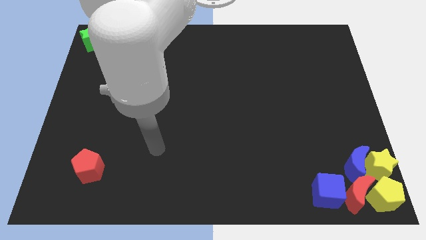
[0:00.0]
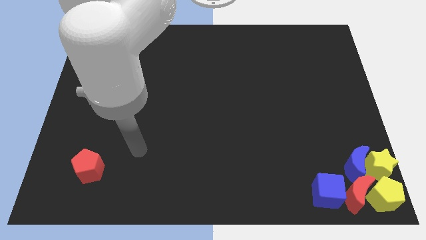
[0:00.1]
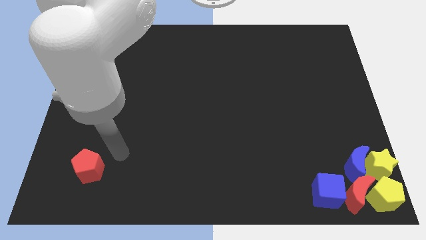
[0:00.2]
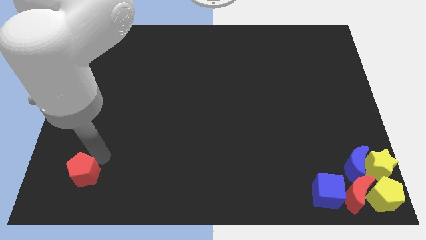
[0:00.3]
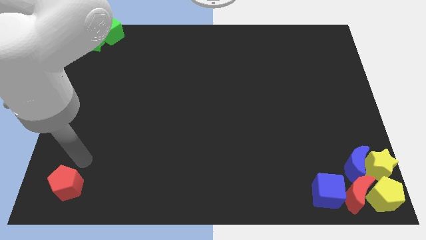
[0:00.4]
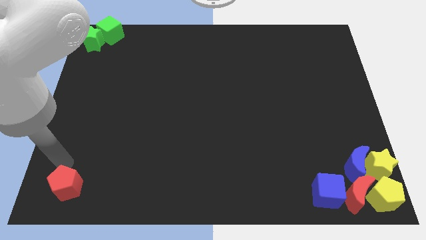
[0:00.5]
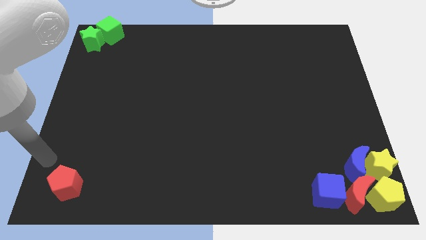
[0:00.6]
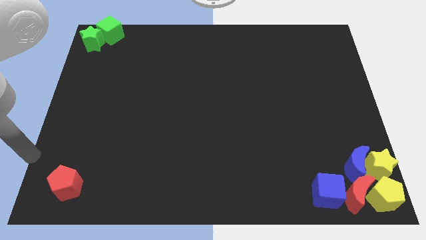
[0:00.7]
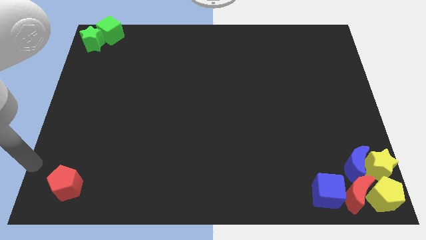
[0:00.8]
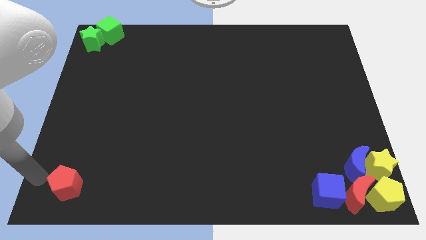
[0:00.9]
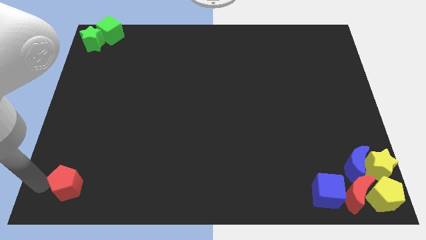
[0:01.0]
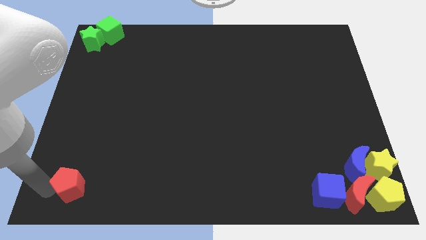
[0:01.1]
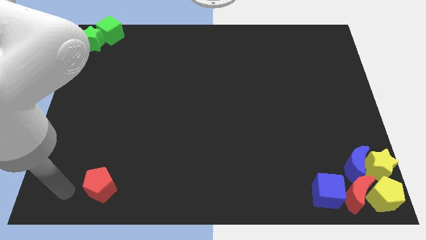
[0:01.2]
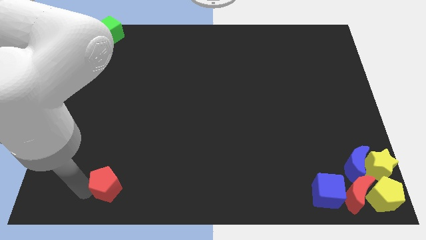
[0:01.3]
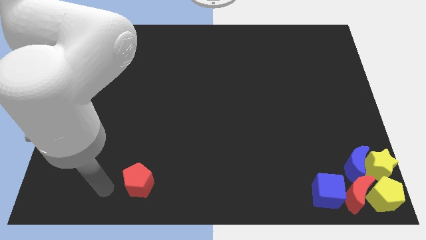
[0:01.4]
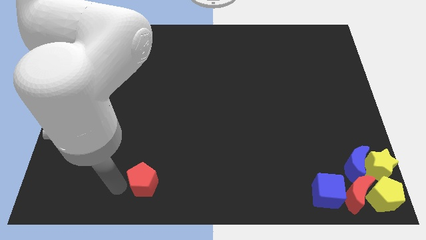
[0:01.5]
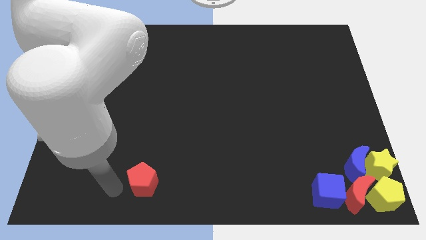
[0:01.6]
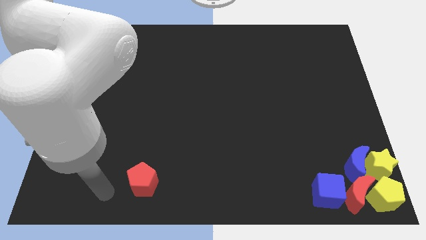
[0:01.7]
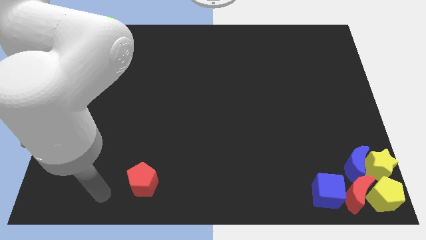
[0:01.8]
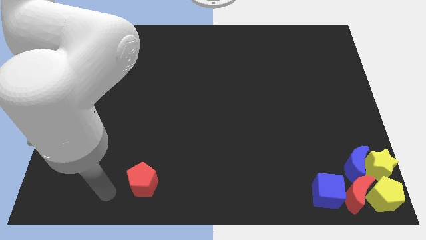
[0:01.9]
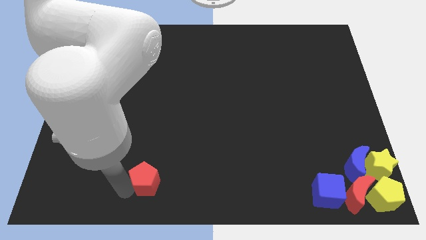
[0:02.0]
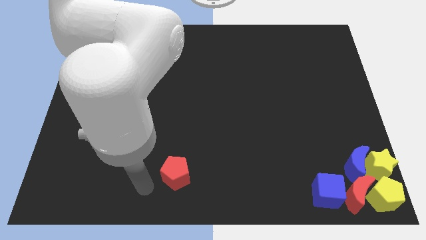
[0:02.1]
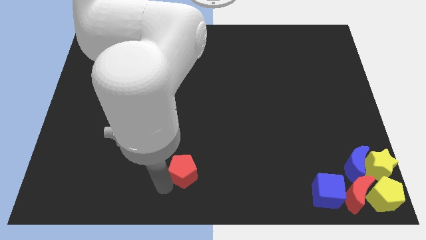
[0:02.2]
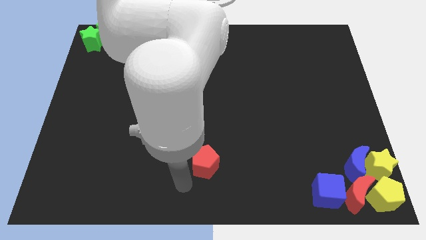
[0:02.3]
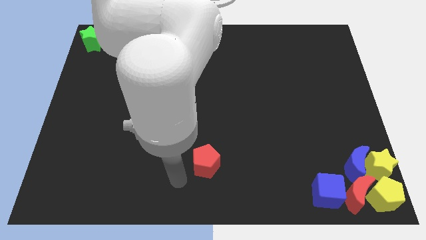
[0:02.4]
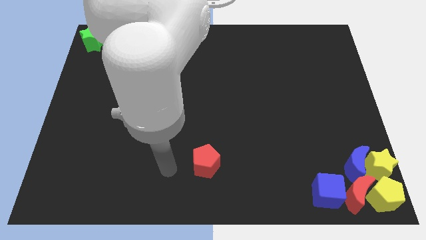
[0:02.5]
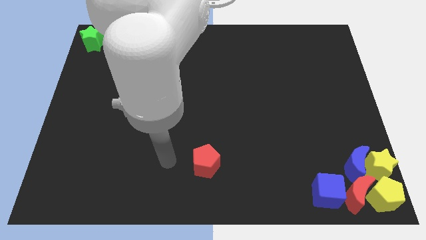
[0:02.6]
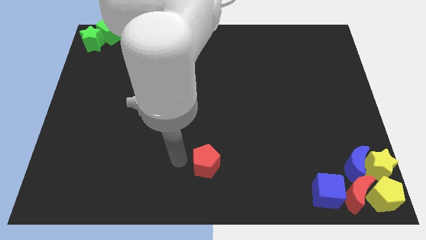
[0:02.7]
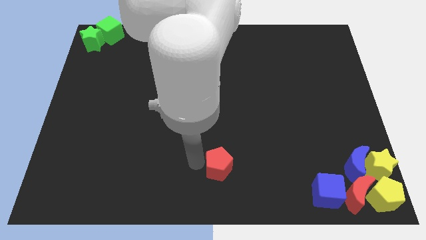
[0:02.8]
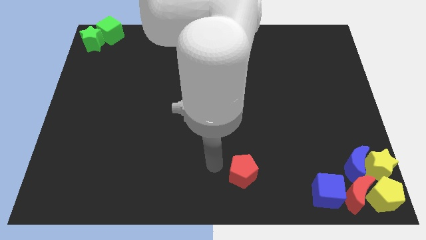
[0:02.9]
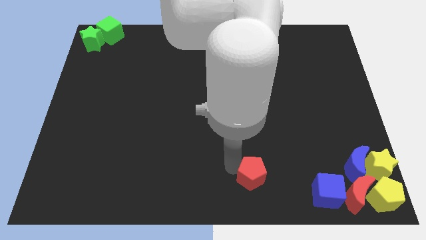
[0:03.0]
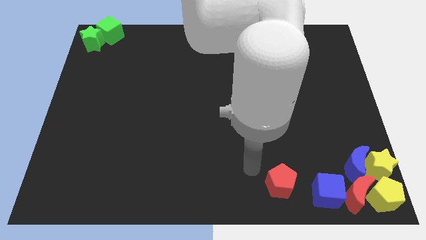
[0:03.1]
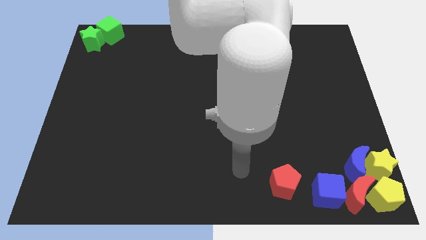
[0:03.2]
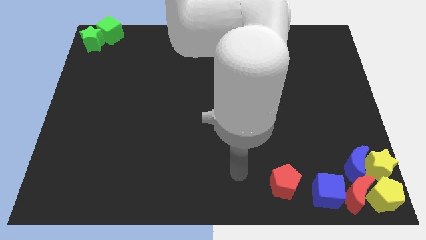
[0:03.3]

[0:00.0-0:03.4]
push the red pentagon to the left side of the blue cube

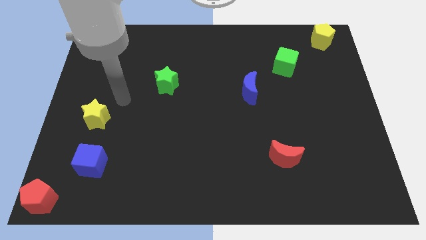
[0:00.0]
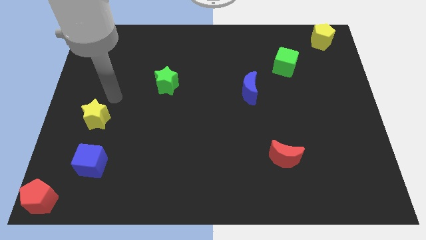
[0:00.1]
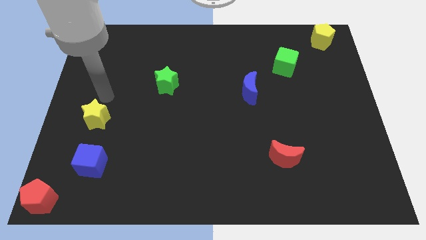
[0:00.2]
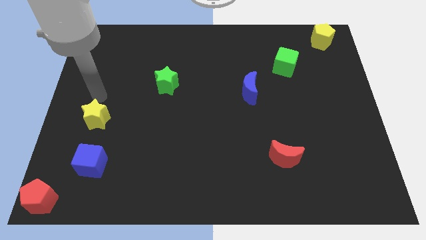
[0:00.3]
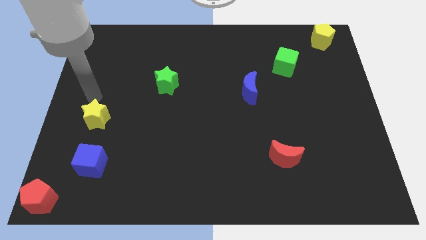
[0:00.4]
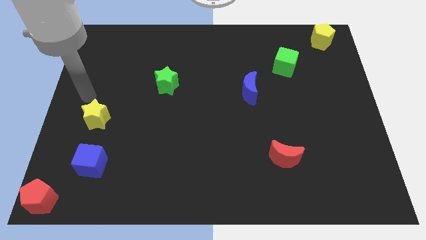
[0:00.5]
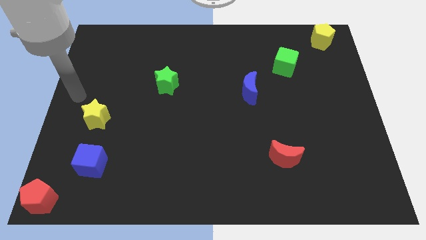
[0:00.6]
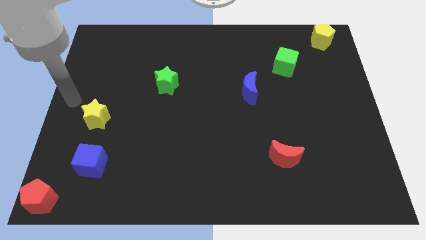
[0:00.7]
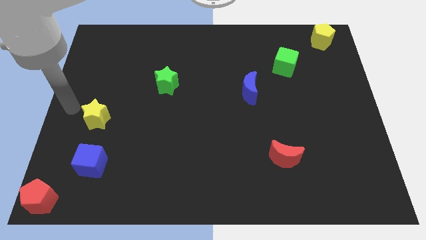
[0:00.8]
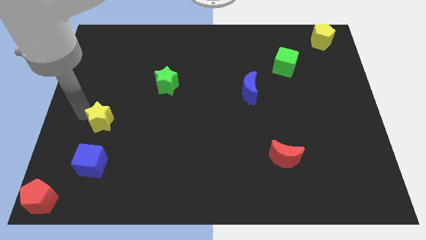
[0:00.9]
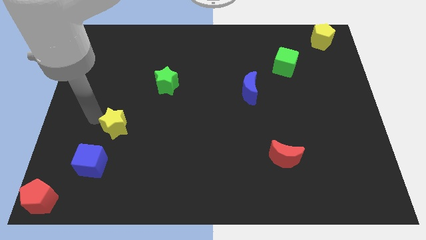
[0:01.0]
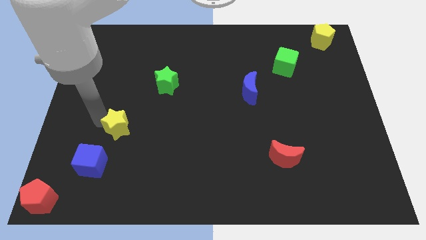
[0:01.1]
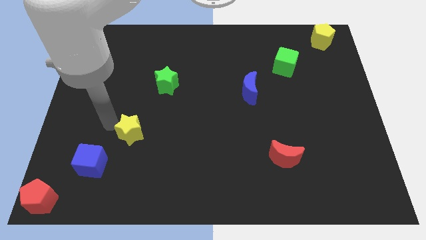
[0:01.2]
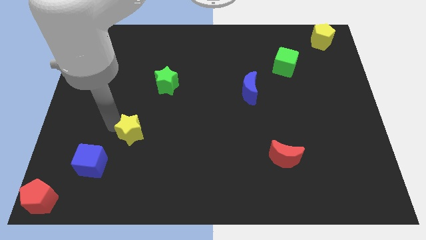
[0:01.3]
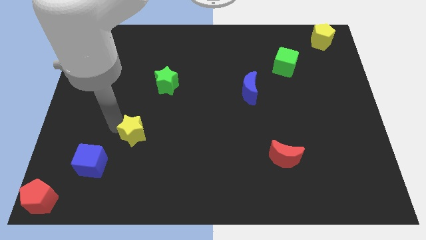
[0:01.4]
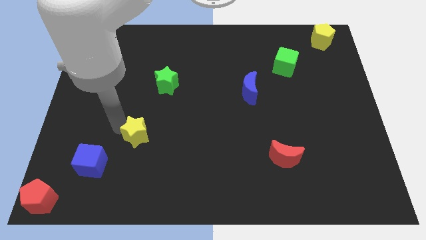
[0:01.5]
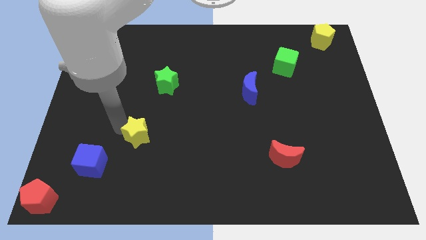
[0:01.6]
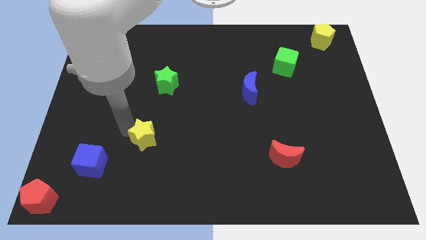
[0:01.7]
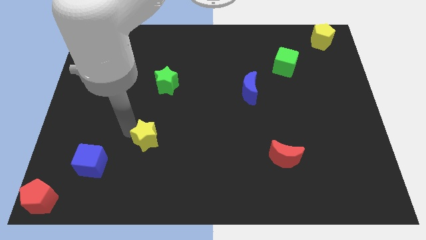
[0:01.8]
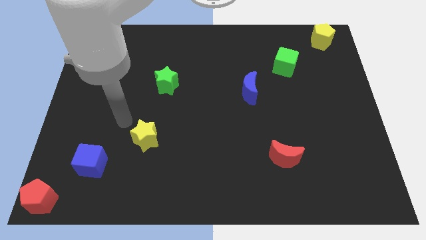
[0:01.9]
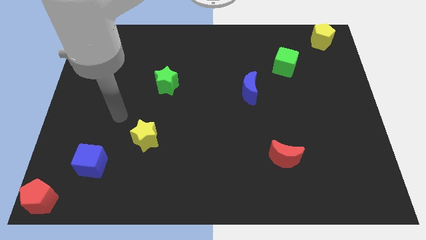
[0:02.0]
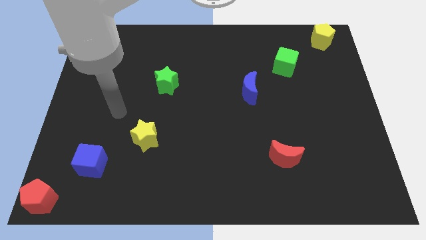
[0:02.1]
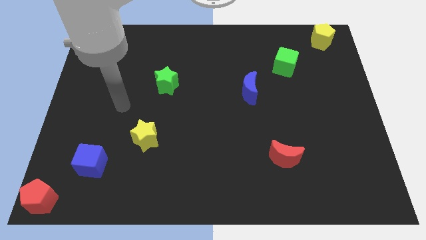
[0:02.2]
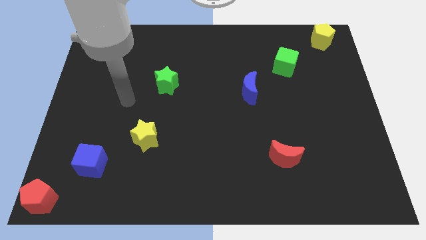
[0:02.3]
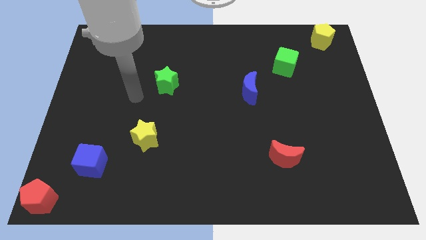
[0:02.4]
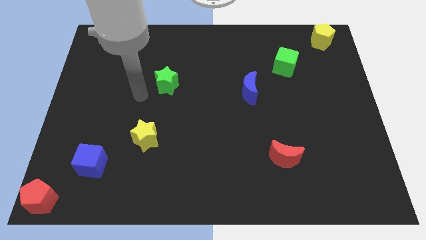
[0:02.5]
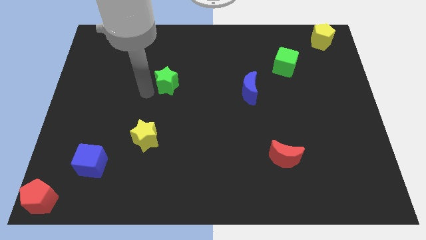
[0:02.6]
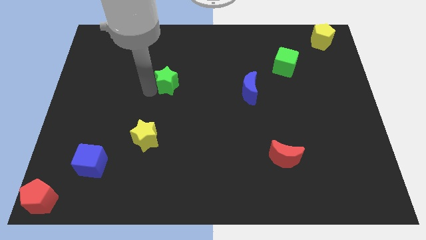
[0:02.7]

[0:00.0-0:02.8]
push yellow star

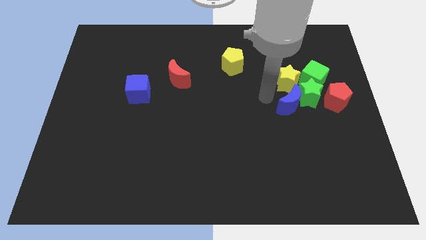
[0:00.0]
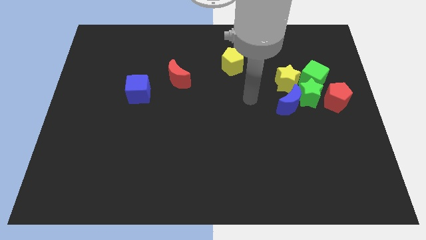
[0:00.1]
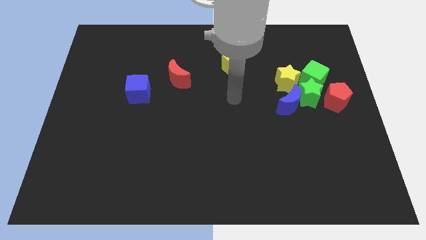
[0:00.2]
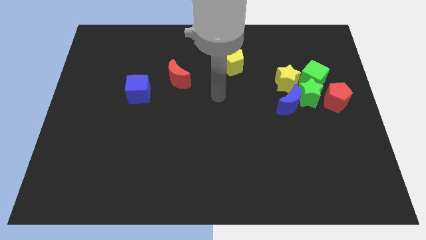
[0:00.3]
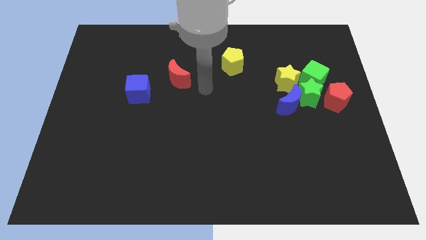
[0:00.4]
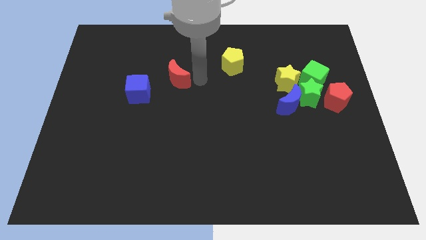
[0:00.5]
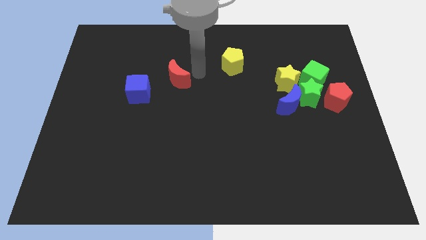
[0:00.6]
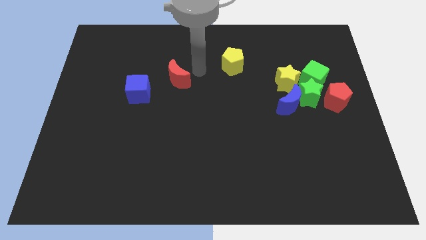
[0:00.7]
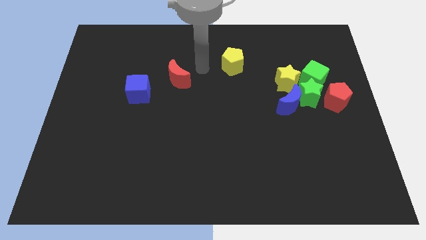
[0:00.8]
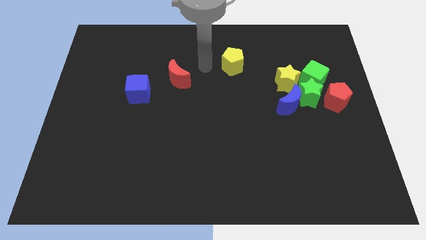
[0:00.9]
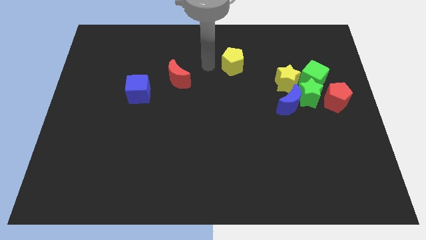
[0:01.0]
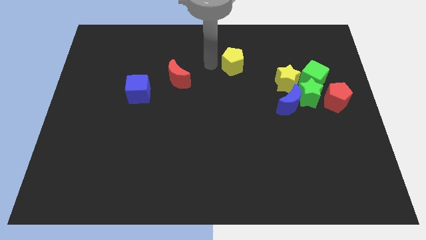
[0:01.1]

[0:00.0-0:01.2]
put your arm to the left side of yellow pentagon

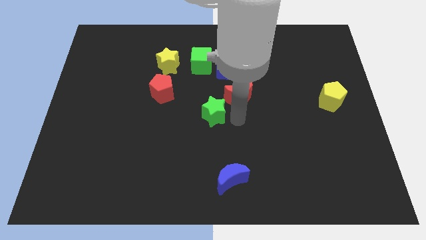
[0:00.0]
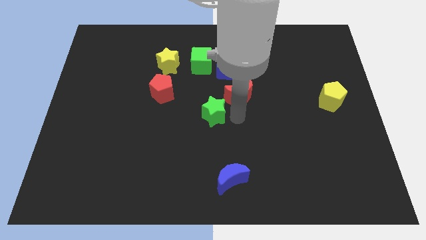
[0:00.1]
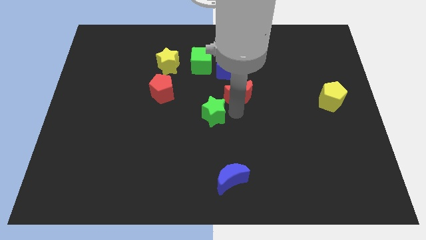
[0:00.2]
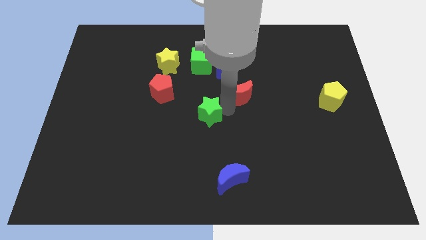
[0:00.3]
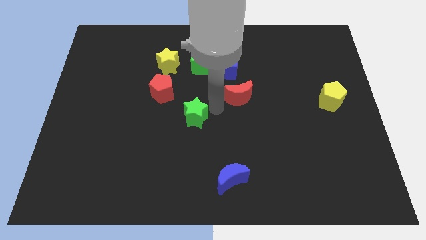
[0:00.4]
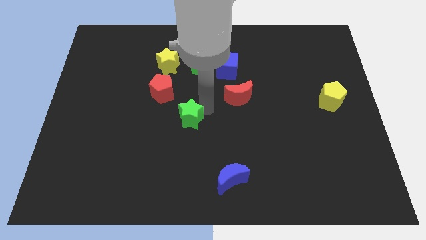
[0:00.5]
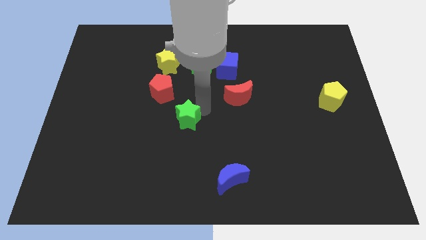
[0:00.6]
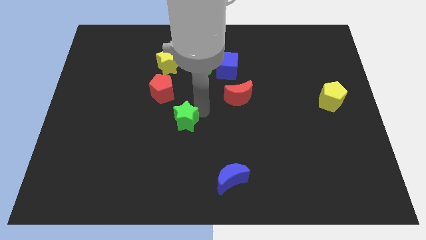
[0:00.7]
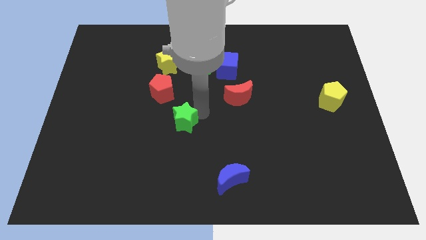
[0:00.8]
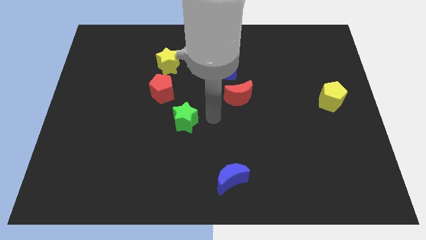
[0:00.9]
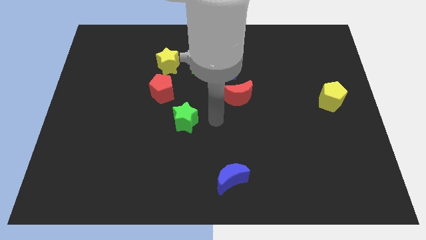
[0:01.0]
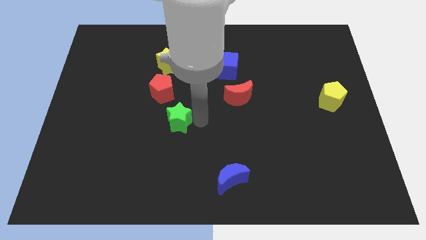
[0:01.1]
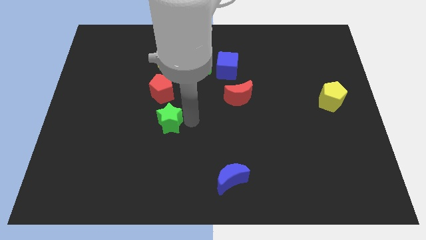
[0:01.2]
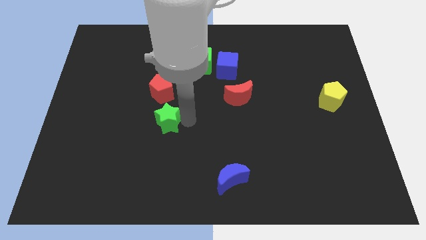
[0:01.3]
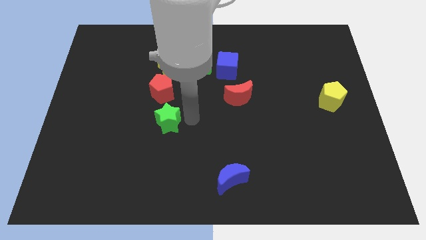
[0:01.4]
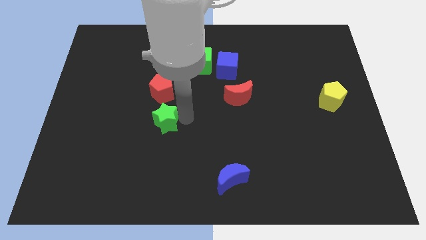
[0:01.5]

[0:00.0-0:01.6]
place the green star to the bottom side of the red pentagon
